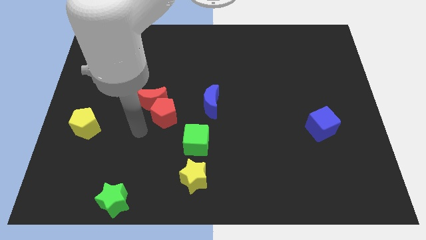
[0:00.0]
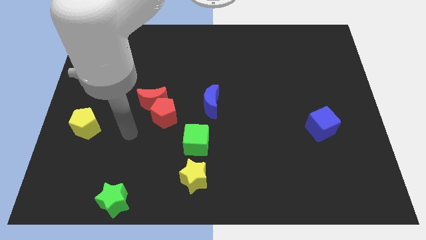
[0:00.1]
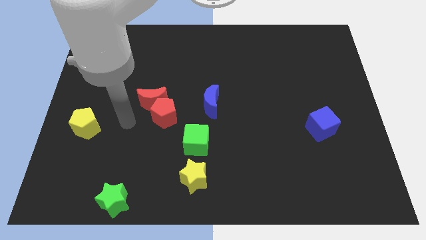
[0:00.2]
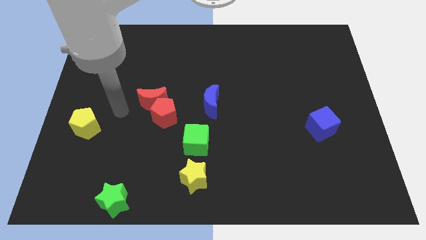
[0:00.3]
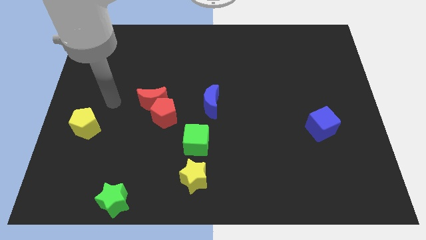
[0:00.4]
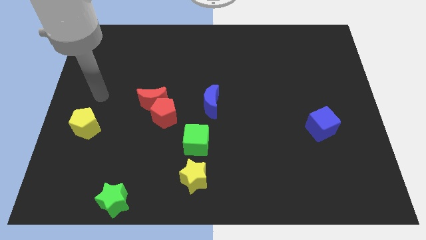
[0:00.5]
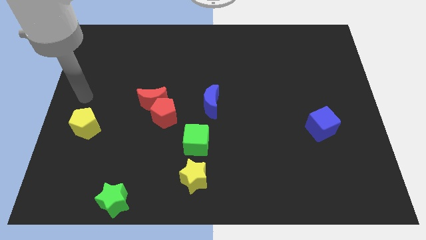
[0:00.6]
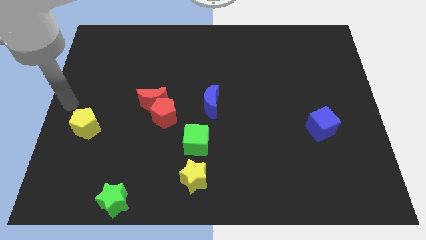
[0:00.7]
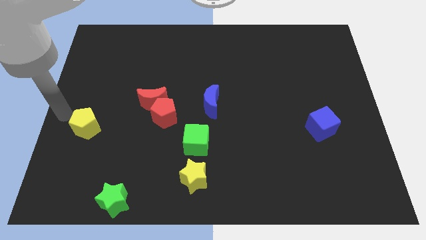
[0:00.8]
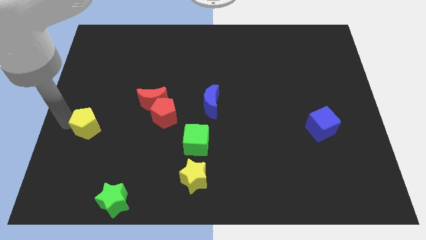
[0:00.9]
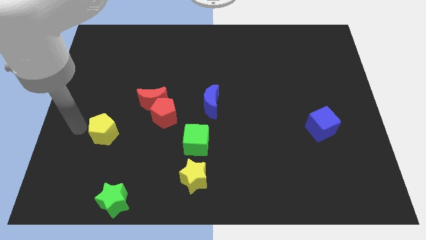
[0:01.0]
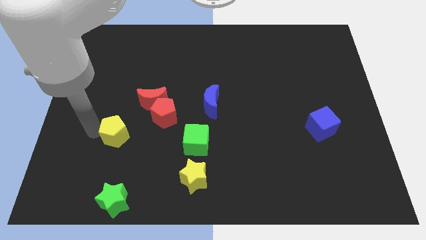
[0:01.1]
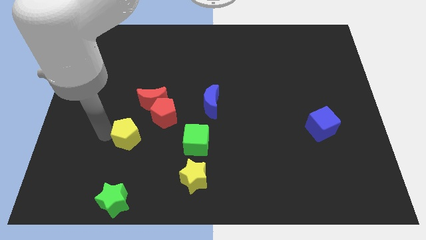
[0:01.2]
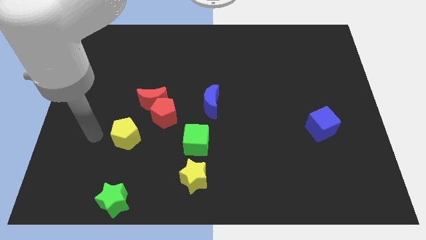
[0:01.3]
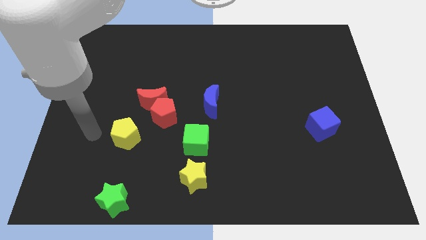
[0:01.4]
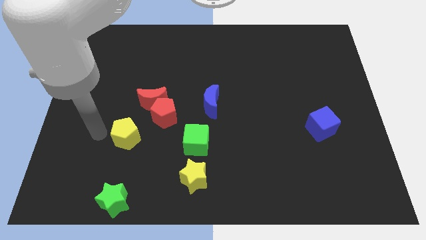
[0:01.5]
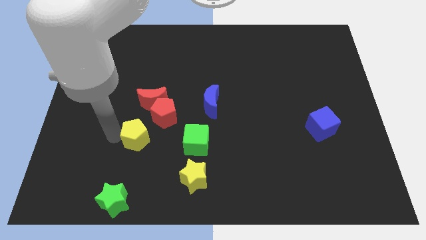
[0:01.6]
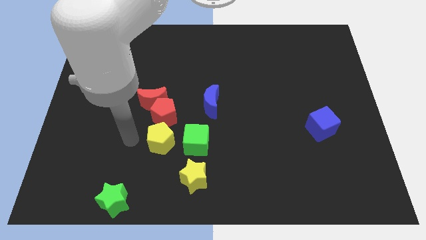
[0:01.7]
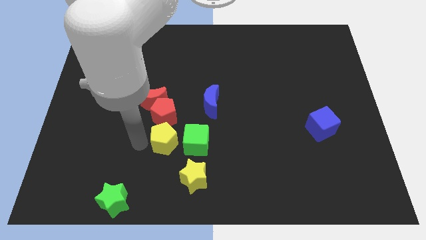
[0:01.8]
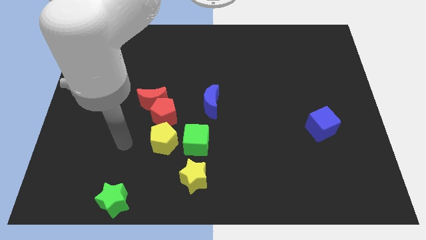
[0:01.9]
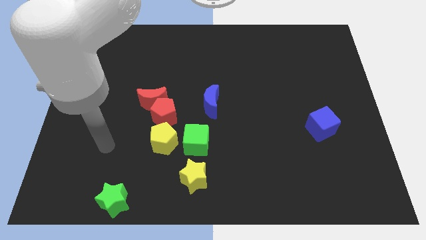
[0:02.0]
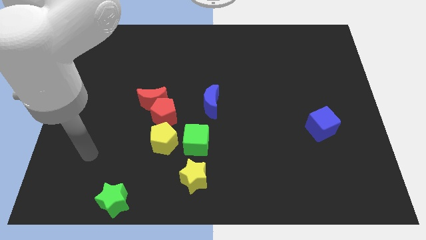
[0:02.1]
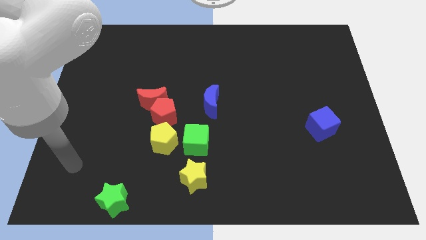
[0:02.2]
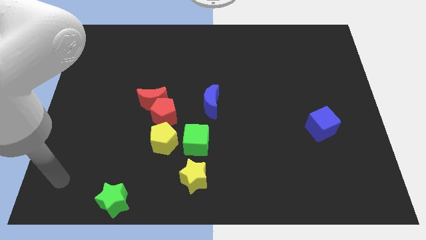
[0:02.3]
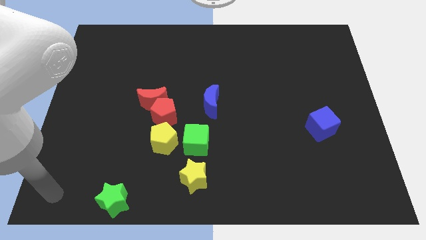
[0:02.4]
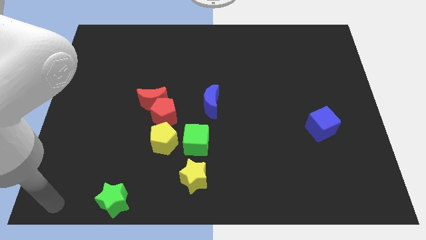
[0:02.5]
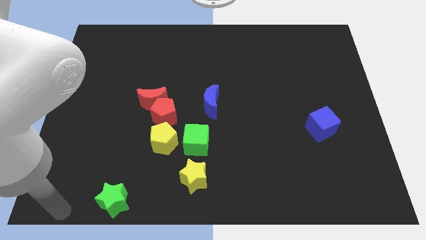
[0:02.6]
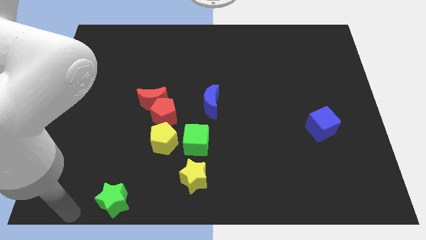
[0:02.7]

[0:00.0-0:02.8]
place the yellow pentagon below the red pentagon

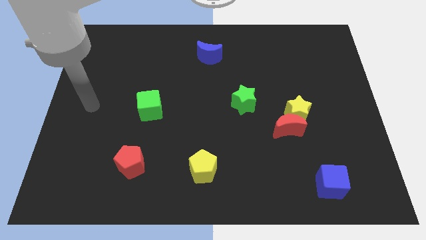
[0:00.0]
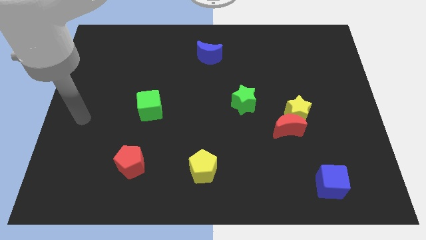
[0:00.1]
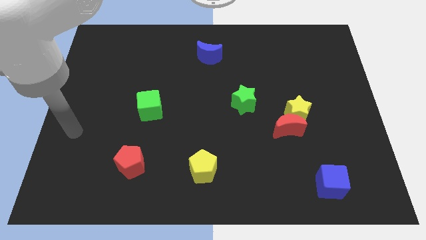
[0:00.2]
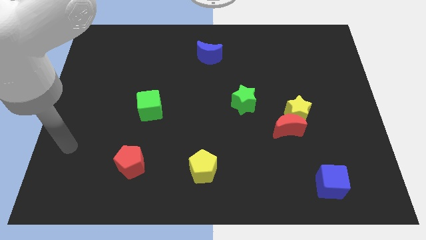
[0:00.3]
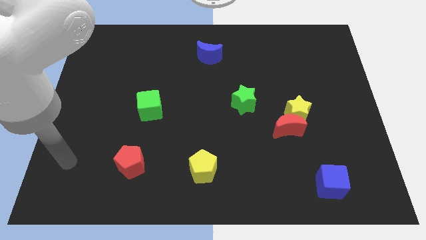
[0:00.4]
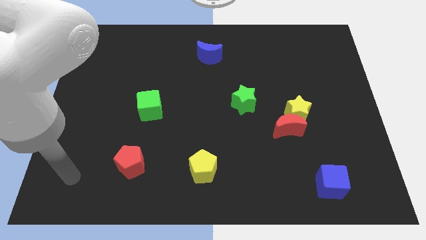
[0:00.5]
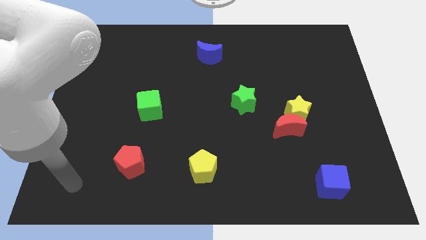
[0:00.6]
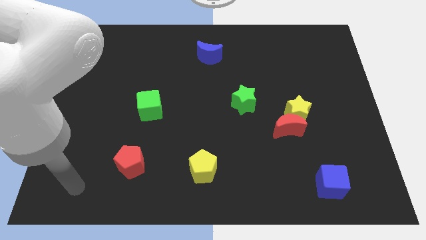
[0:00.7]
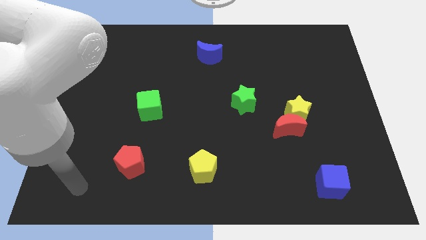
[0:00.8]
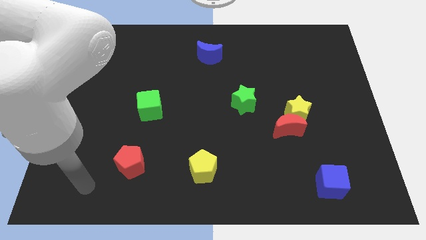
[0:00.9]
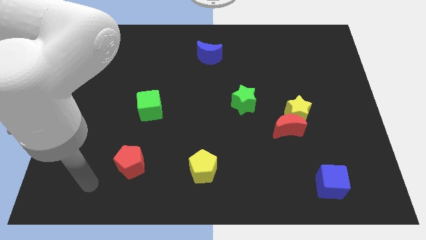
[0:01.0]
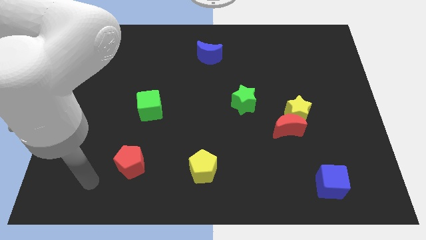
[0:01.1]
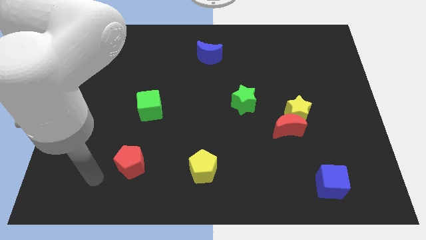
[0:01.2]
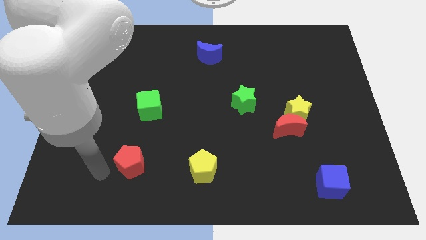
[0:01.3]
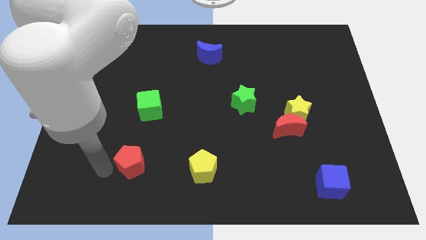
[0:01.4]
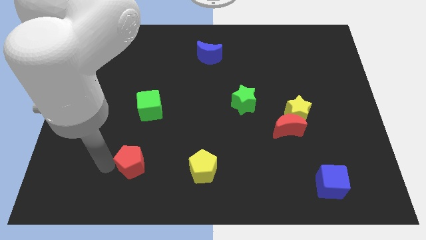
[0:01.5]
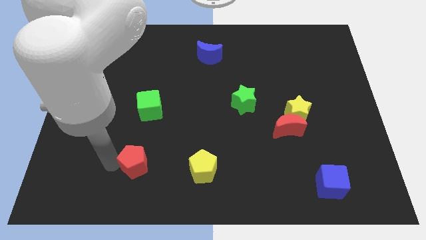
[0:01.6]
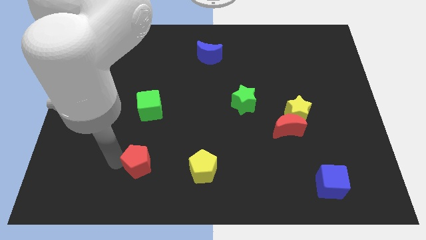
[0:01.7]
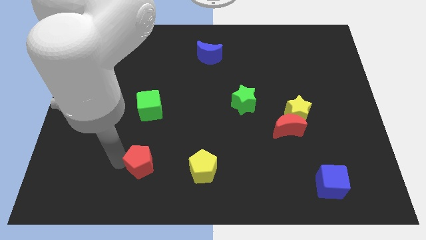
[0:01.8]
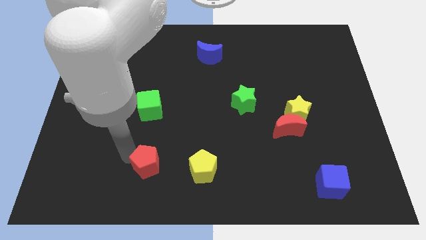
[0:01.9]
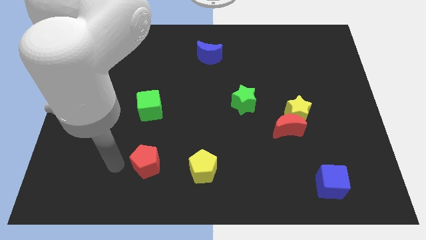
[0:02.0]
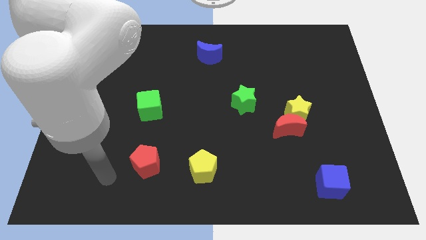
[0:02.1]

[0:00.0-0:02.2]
push the red pentagon towards the left side of the yellow pentagon

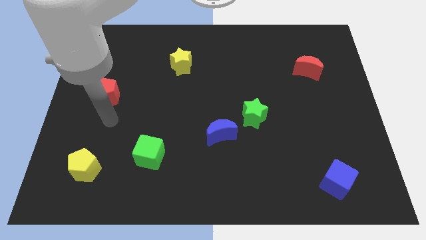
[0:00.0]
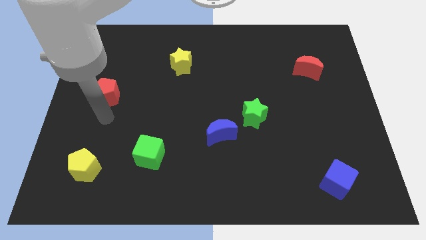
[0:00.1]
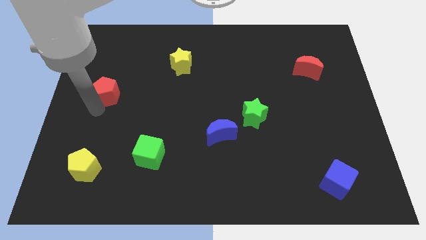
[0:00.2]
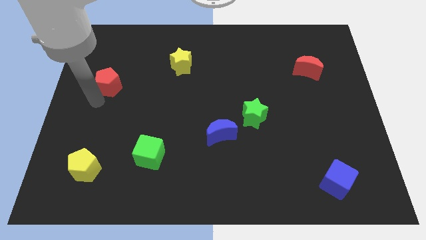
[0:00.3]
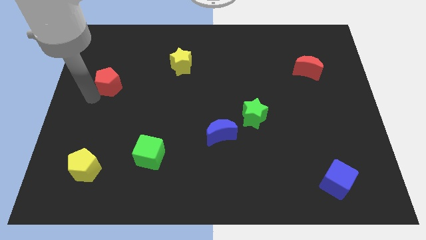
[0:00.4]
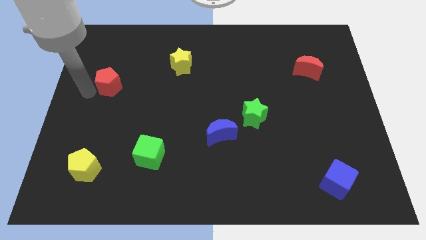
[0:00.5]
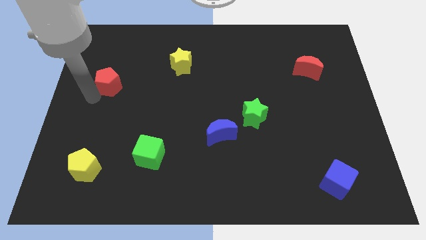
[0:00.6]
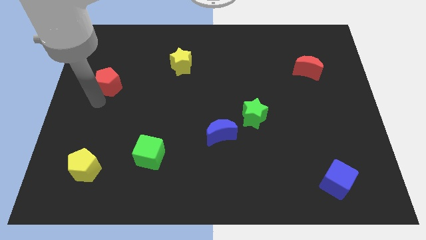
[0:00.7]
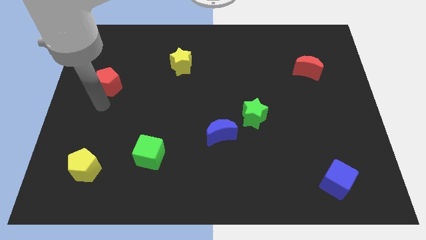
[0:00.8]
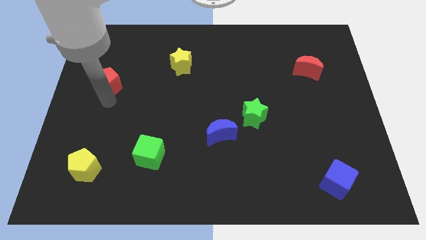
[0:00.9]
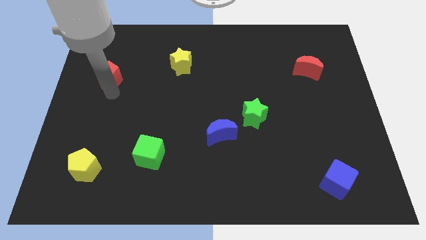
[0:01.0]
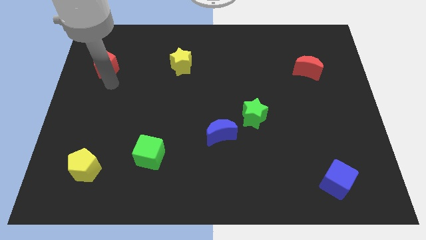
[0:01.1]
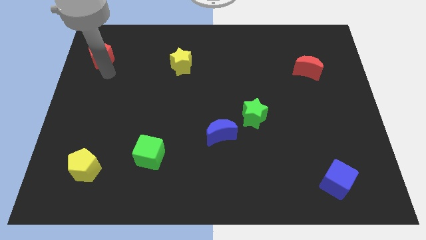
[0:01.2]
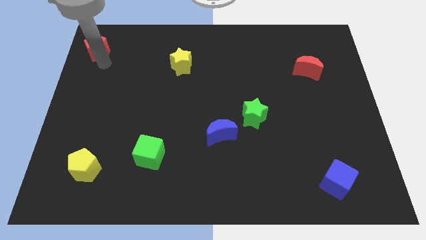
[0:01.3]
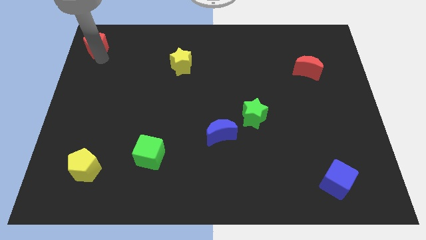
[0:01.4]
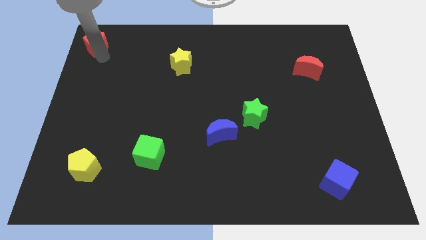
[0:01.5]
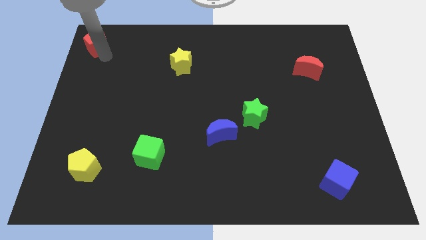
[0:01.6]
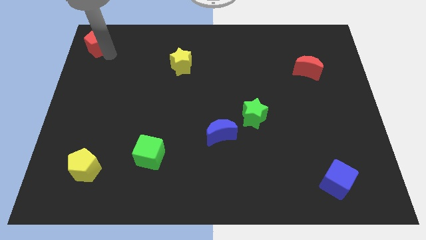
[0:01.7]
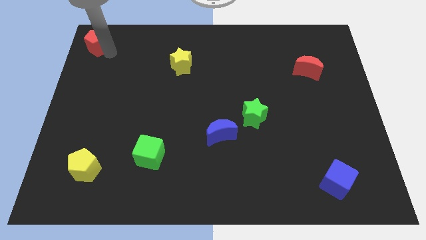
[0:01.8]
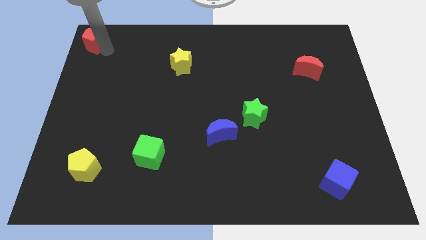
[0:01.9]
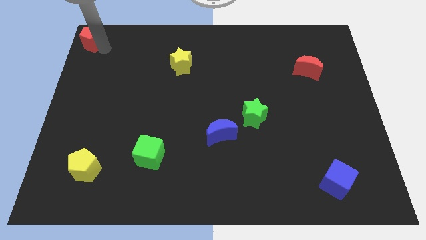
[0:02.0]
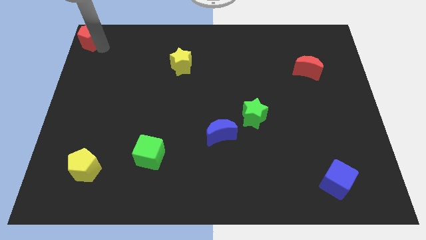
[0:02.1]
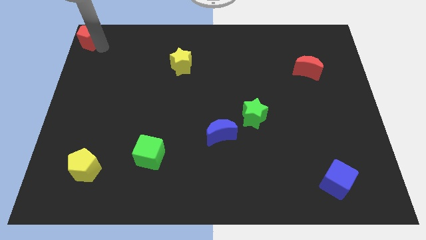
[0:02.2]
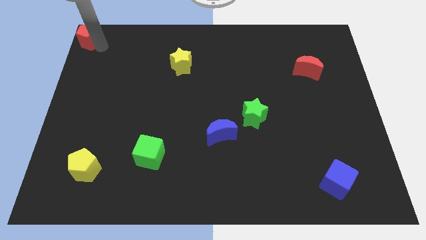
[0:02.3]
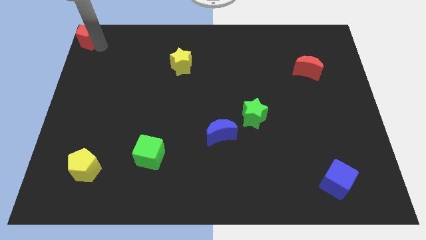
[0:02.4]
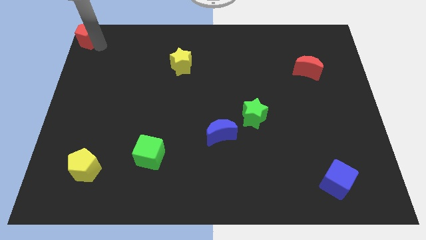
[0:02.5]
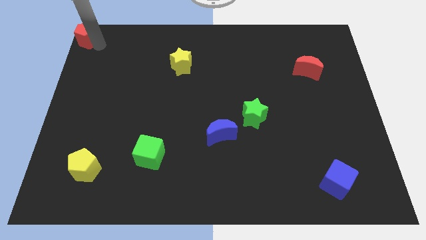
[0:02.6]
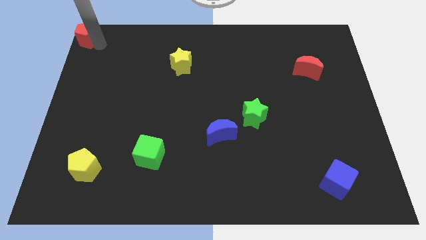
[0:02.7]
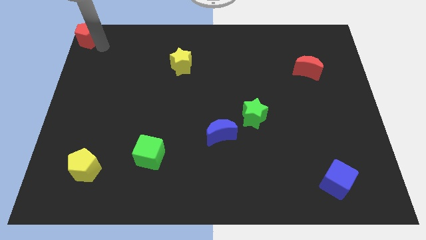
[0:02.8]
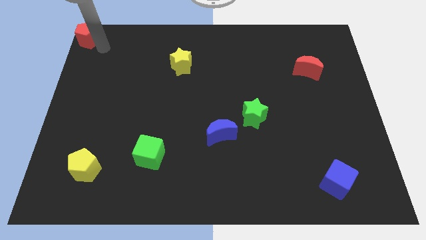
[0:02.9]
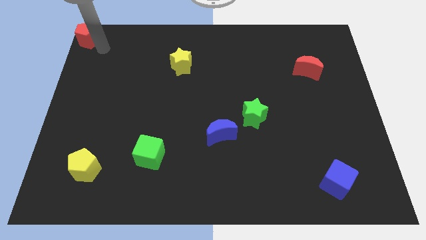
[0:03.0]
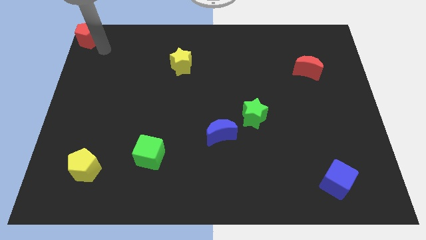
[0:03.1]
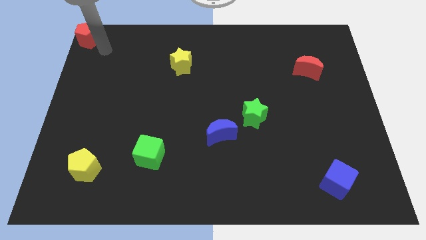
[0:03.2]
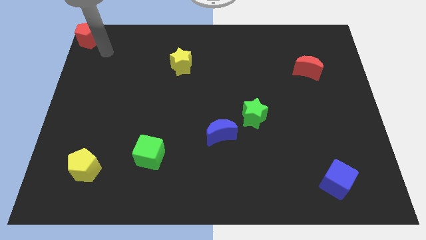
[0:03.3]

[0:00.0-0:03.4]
move the red pentagon at the top left corner of the board

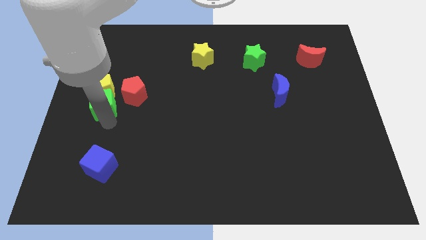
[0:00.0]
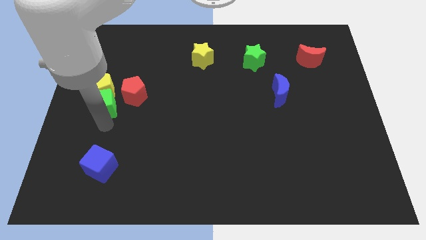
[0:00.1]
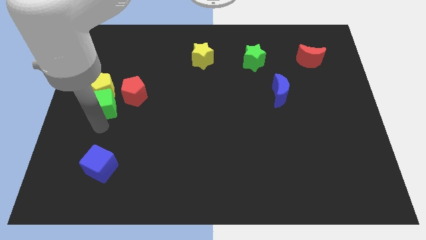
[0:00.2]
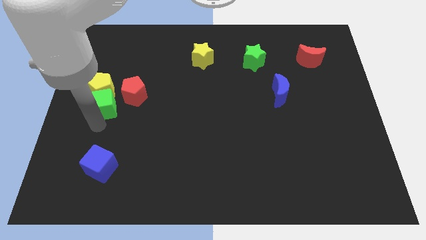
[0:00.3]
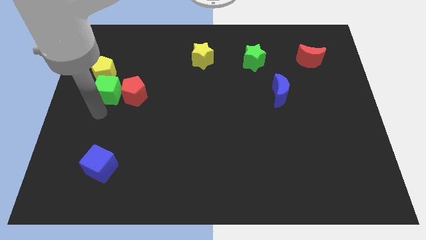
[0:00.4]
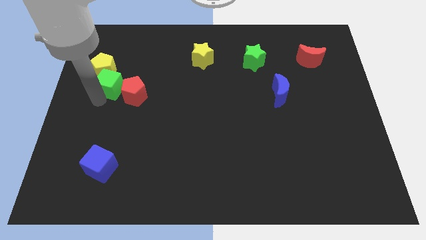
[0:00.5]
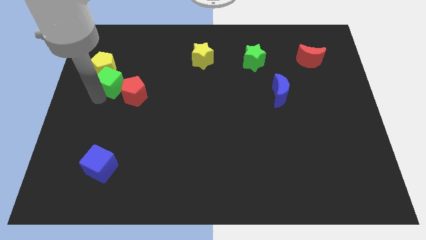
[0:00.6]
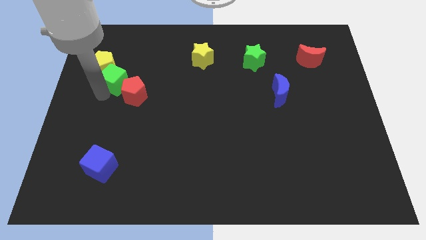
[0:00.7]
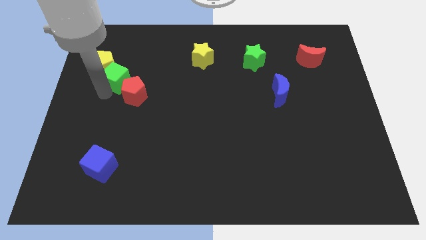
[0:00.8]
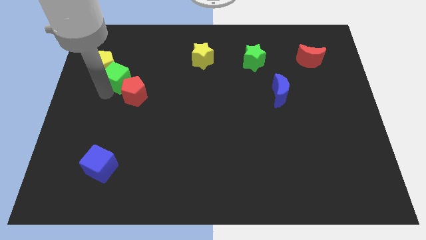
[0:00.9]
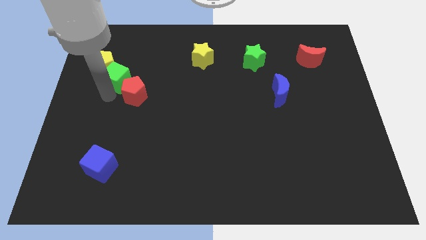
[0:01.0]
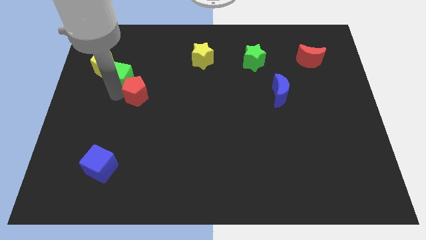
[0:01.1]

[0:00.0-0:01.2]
push the green cube in between yellow pentagon and red pentagon to form a diagonal line
